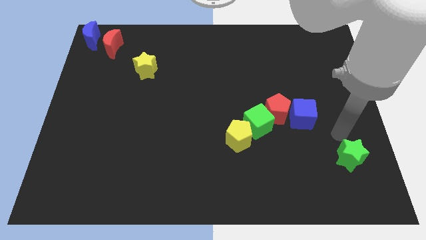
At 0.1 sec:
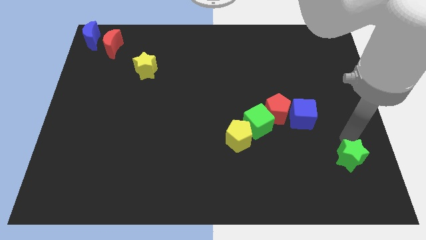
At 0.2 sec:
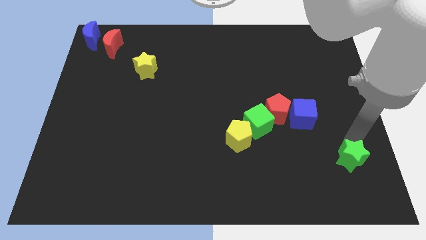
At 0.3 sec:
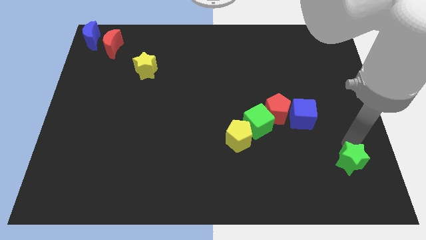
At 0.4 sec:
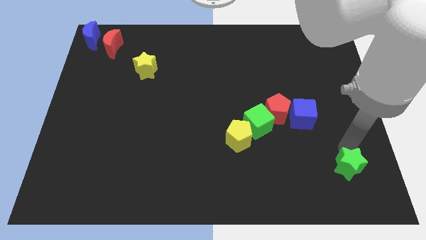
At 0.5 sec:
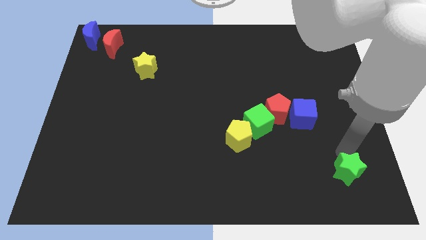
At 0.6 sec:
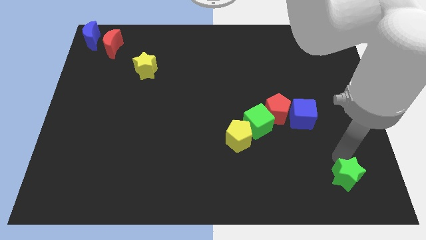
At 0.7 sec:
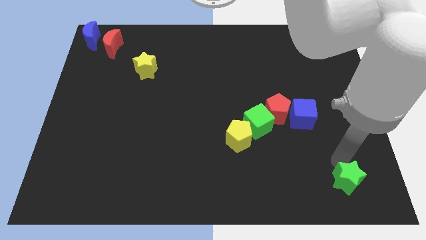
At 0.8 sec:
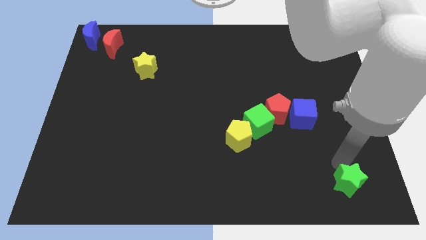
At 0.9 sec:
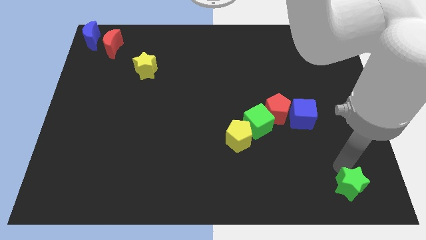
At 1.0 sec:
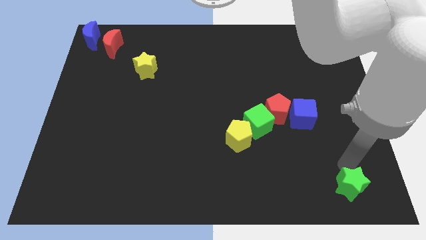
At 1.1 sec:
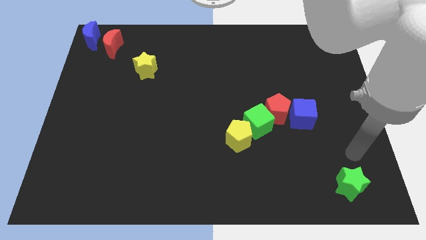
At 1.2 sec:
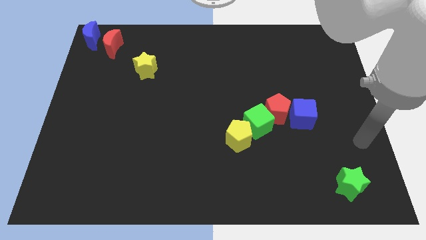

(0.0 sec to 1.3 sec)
push the green star to the bottom right of the board

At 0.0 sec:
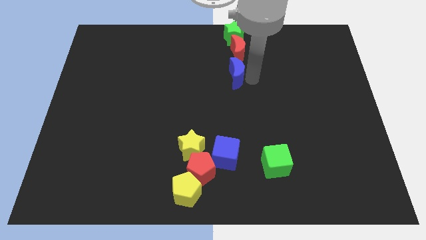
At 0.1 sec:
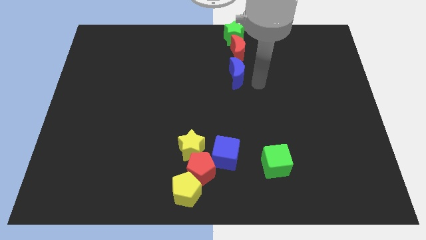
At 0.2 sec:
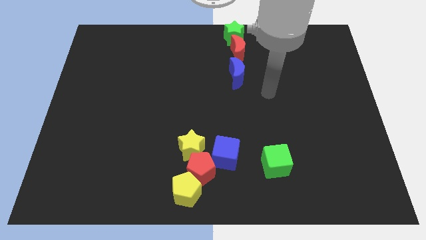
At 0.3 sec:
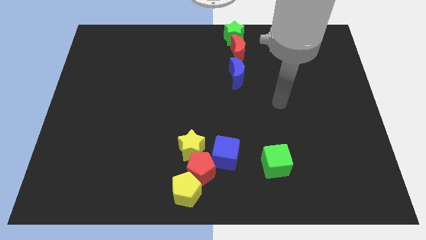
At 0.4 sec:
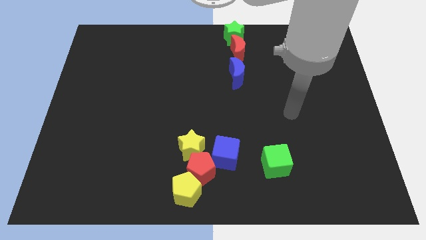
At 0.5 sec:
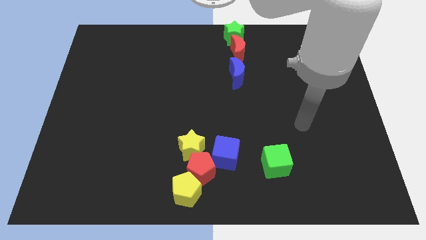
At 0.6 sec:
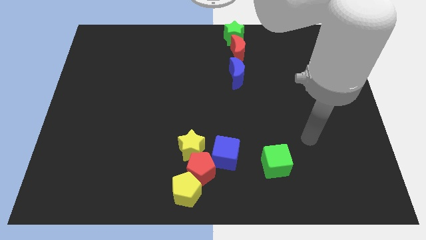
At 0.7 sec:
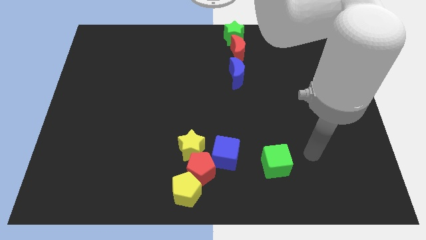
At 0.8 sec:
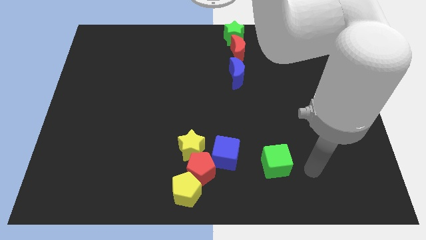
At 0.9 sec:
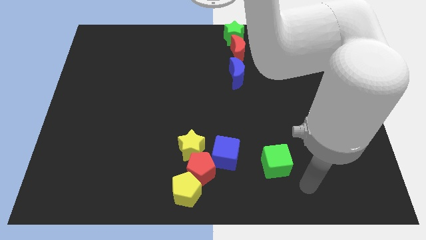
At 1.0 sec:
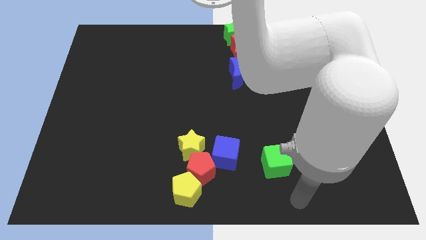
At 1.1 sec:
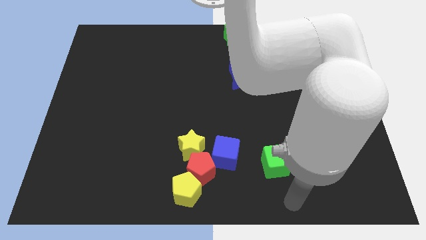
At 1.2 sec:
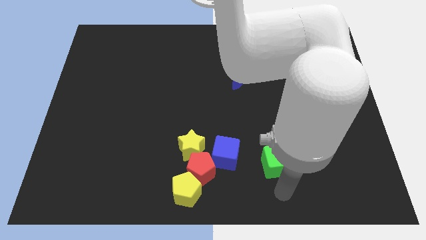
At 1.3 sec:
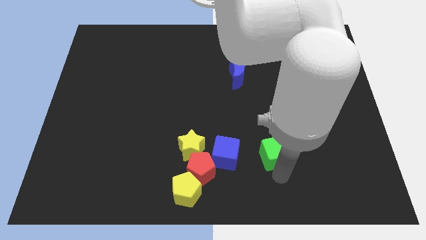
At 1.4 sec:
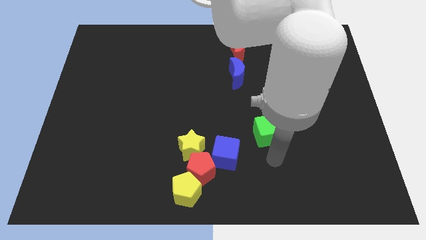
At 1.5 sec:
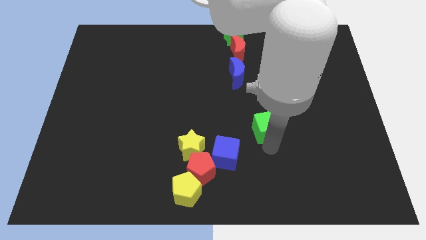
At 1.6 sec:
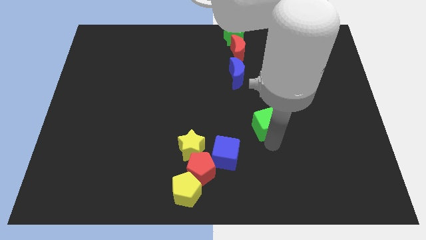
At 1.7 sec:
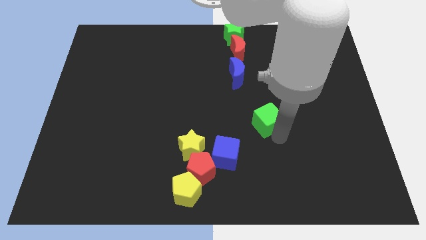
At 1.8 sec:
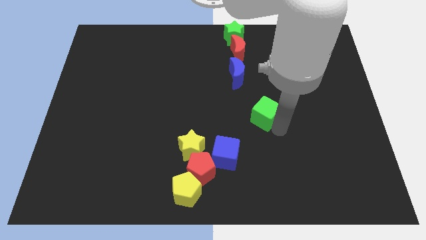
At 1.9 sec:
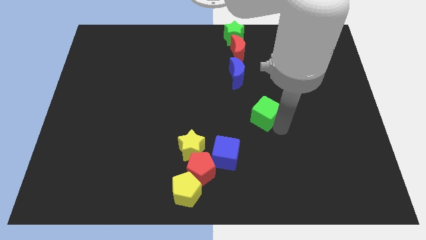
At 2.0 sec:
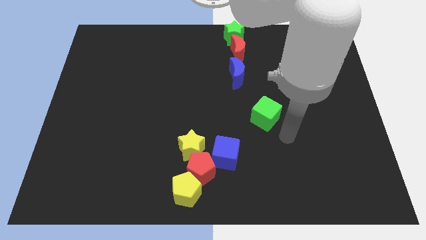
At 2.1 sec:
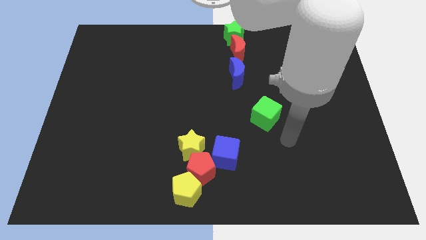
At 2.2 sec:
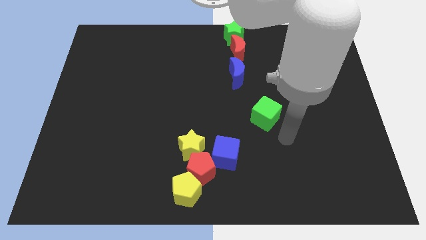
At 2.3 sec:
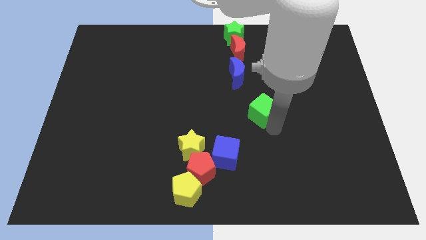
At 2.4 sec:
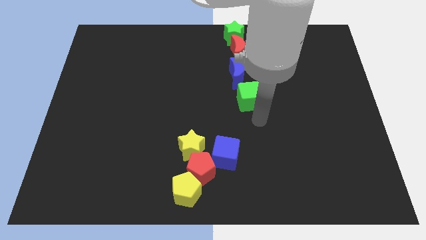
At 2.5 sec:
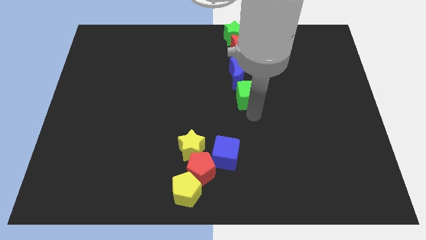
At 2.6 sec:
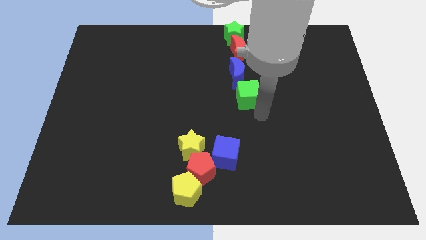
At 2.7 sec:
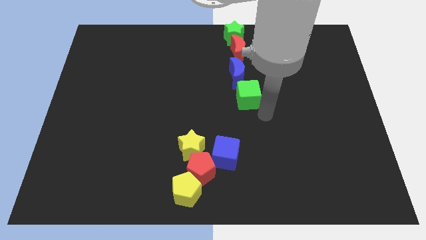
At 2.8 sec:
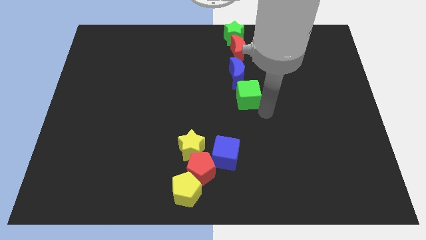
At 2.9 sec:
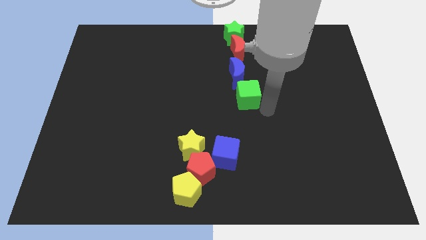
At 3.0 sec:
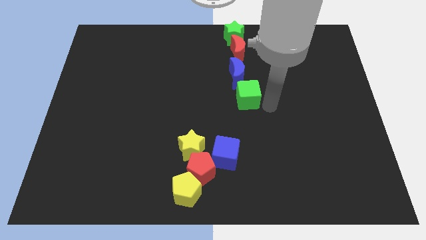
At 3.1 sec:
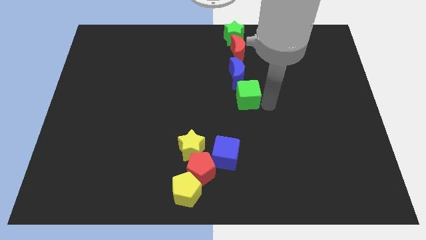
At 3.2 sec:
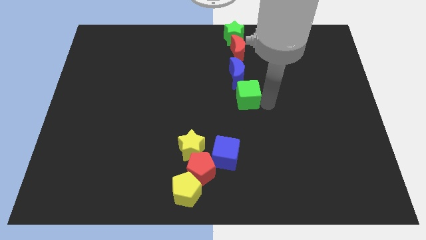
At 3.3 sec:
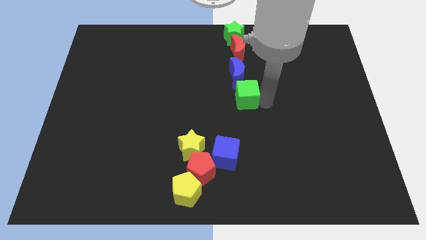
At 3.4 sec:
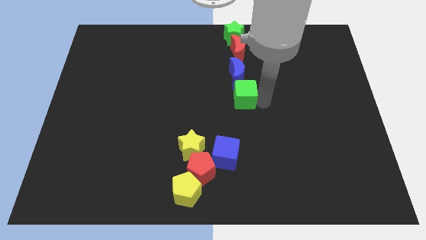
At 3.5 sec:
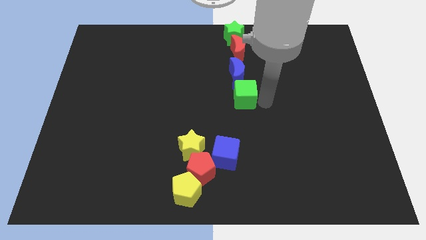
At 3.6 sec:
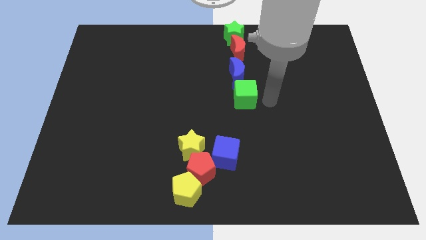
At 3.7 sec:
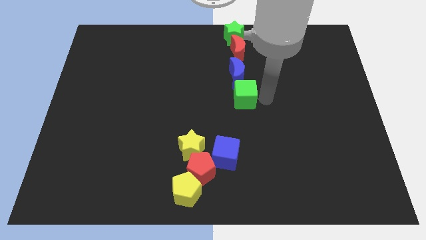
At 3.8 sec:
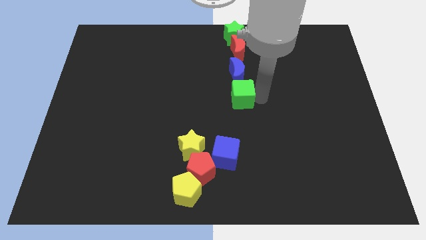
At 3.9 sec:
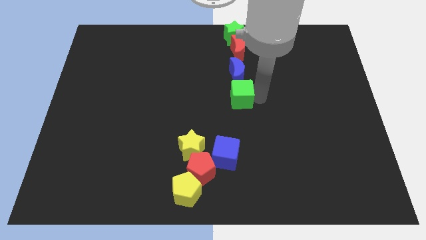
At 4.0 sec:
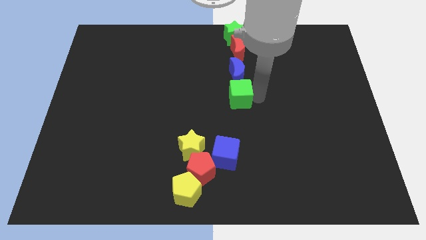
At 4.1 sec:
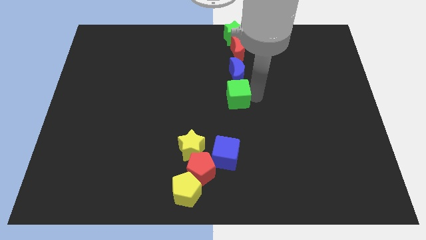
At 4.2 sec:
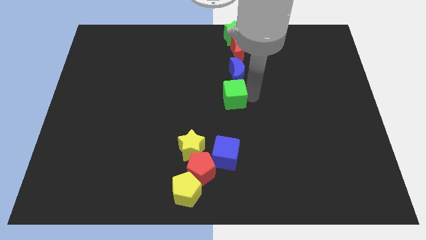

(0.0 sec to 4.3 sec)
push the green cube to the bottom of the blue crescent

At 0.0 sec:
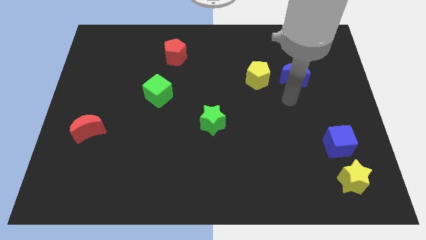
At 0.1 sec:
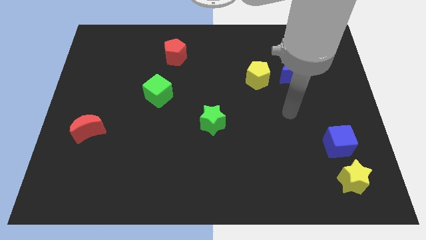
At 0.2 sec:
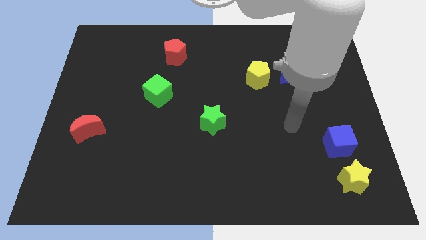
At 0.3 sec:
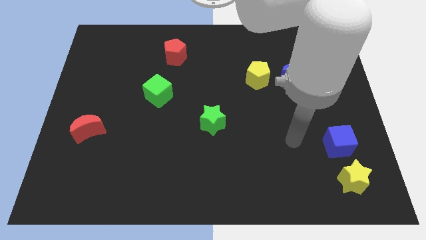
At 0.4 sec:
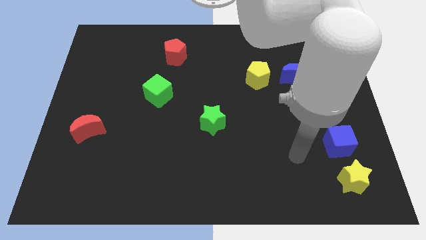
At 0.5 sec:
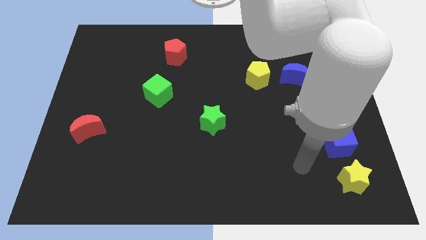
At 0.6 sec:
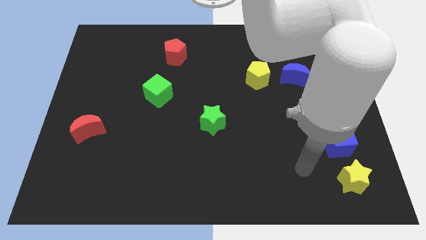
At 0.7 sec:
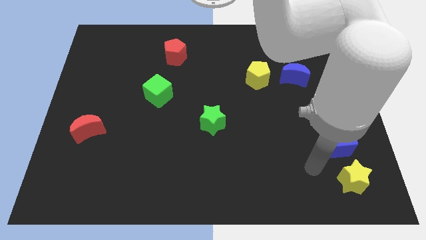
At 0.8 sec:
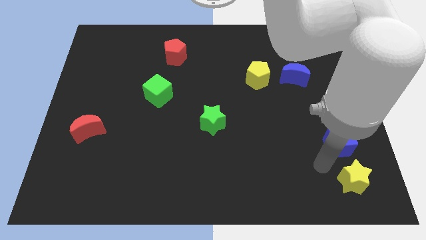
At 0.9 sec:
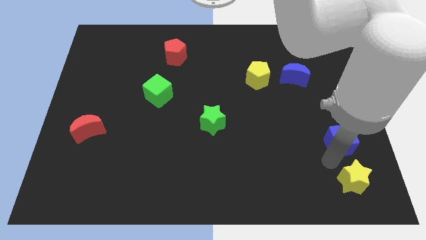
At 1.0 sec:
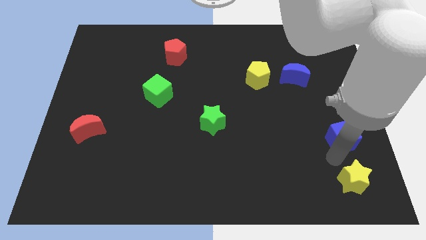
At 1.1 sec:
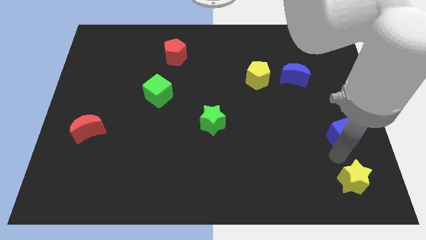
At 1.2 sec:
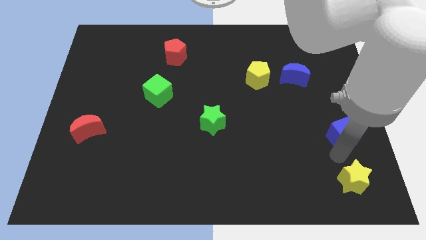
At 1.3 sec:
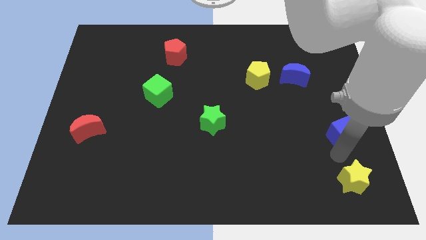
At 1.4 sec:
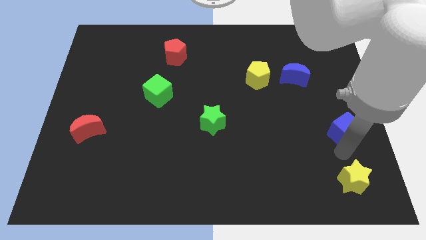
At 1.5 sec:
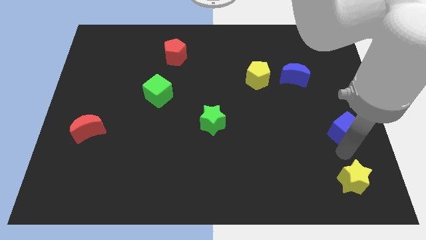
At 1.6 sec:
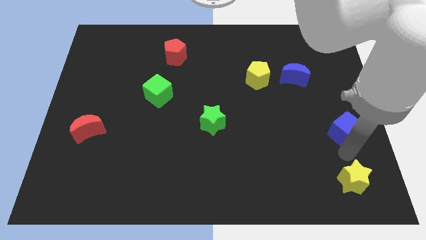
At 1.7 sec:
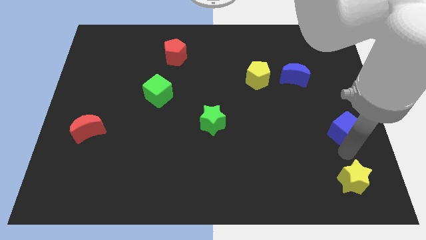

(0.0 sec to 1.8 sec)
push the blue cube slightly to the top

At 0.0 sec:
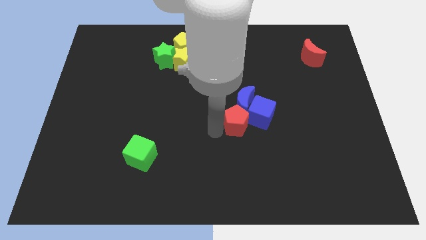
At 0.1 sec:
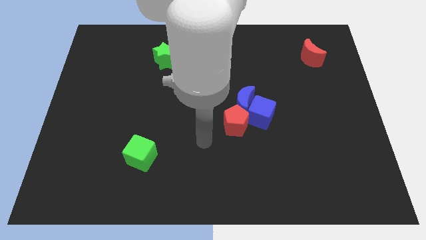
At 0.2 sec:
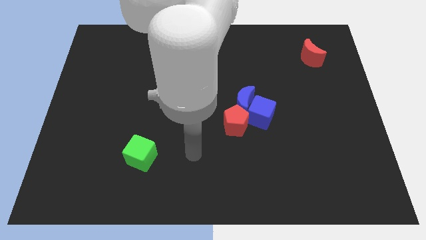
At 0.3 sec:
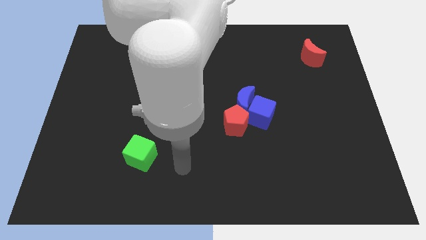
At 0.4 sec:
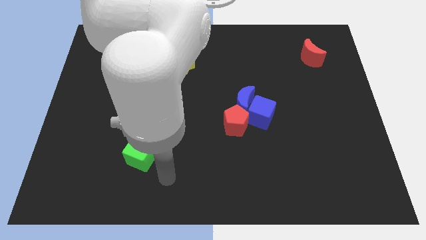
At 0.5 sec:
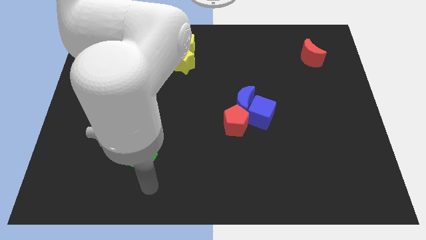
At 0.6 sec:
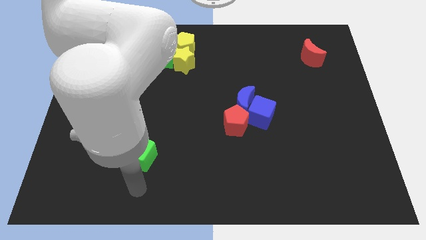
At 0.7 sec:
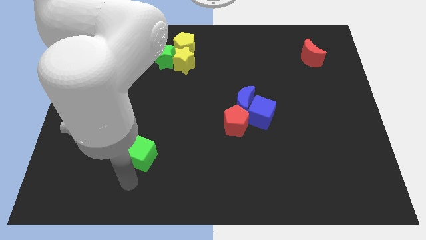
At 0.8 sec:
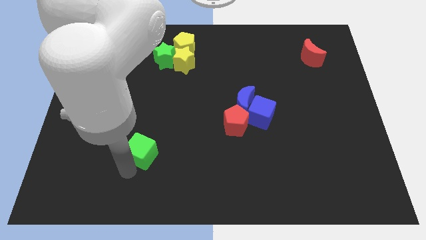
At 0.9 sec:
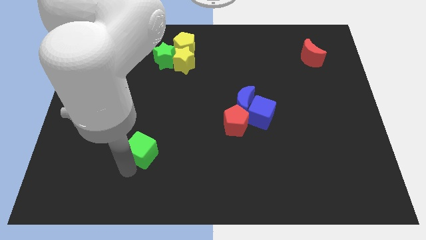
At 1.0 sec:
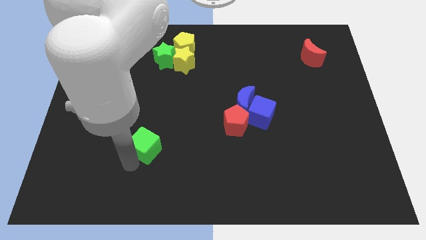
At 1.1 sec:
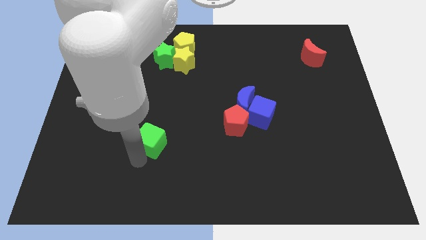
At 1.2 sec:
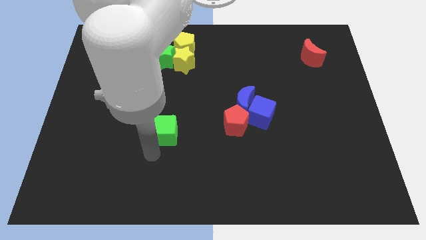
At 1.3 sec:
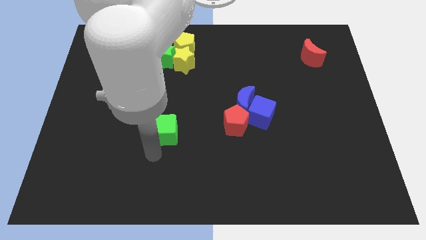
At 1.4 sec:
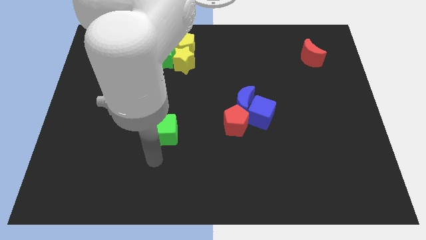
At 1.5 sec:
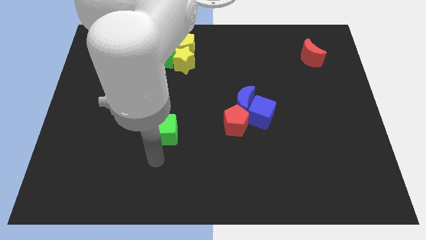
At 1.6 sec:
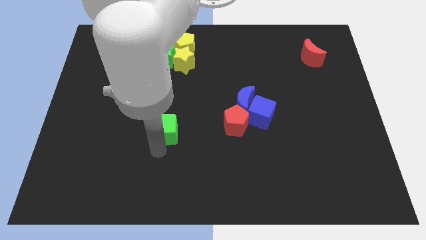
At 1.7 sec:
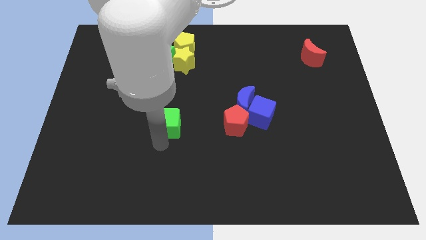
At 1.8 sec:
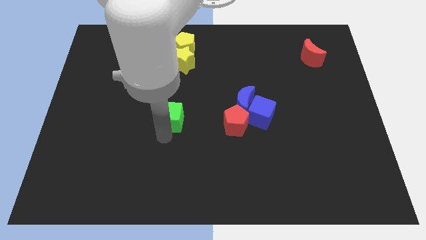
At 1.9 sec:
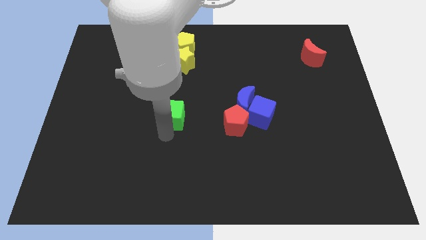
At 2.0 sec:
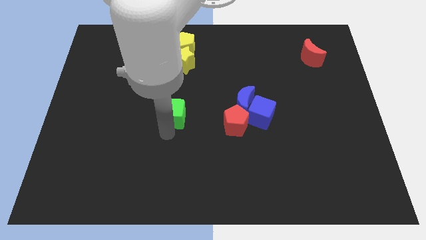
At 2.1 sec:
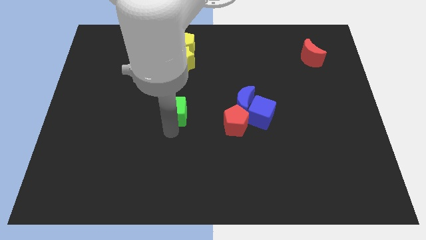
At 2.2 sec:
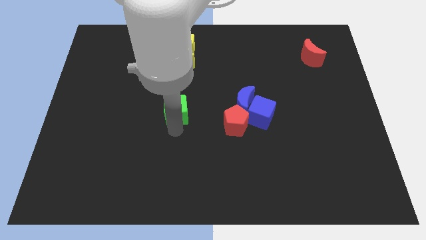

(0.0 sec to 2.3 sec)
move green cube horizontally towards red pentgaon
